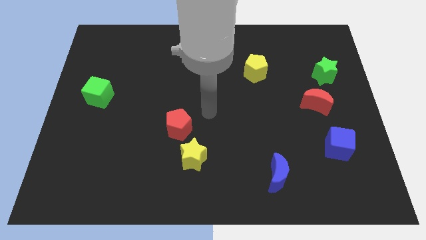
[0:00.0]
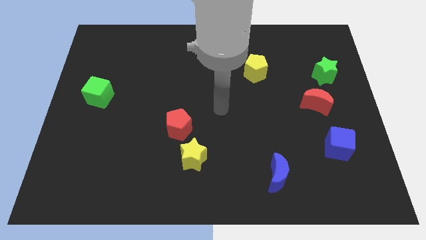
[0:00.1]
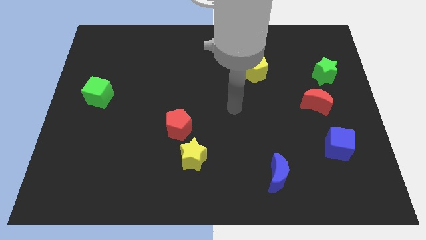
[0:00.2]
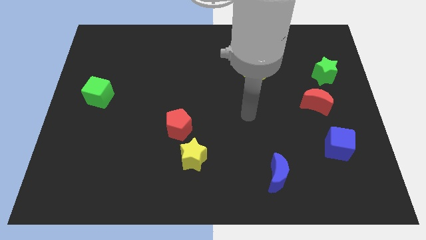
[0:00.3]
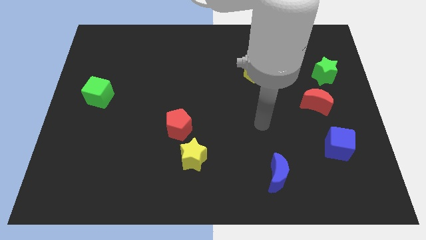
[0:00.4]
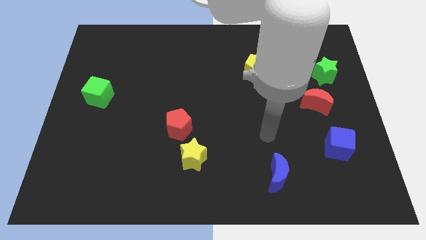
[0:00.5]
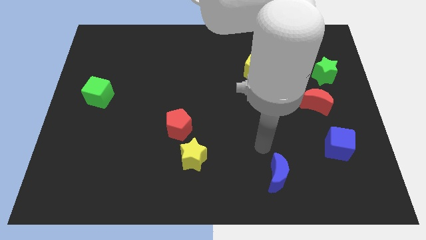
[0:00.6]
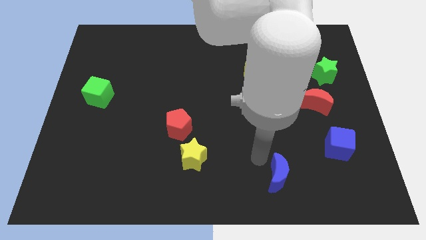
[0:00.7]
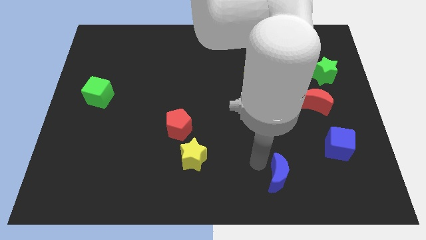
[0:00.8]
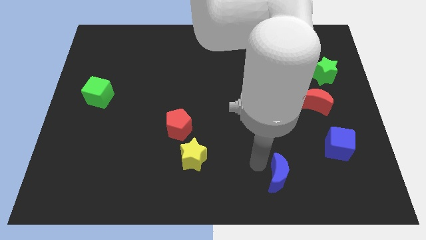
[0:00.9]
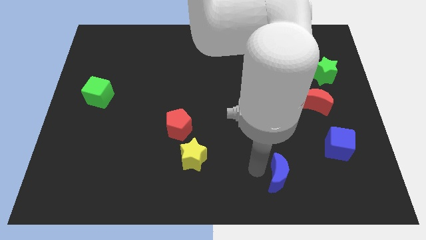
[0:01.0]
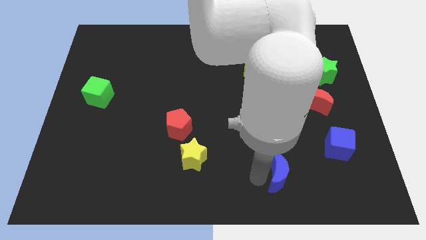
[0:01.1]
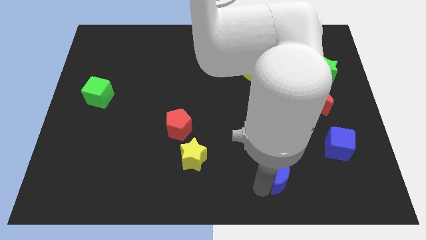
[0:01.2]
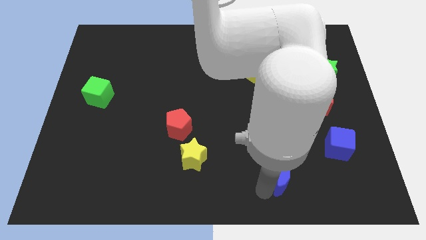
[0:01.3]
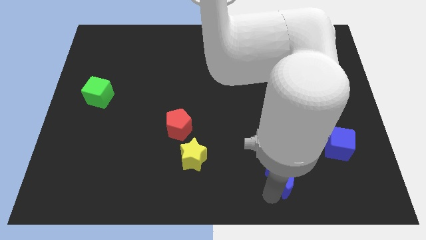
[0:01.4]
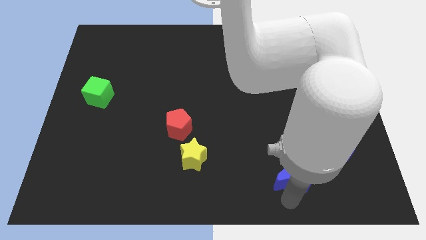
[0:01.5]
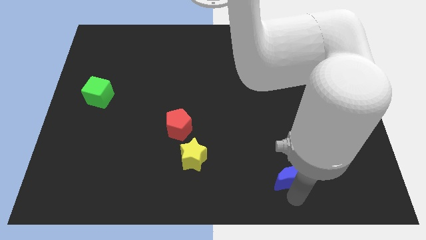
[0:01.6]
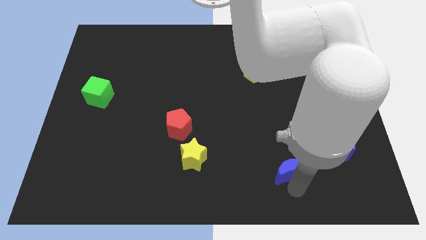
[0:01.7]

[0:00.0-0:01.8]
move your arm and turn the blue moon

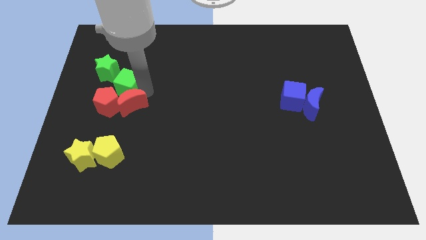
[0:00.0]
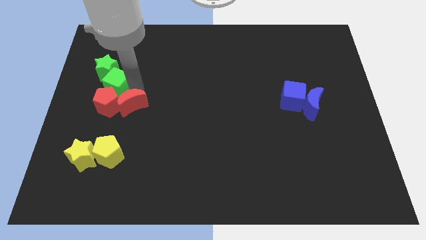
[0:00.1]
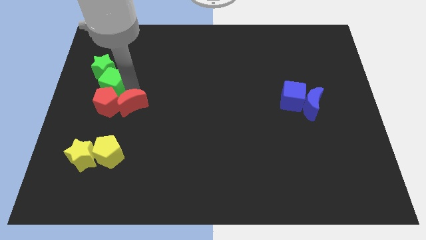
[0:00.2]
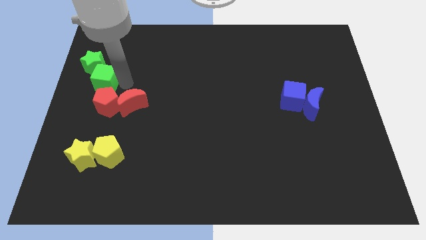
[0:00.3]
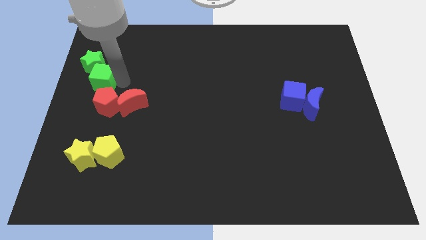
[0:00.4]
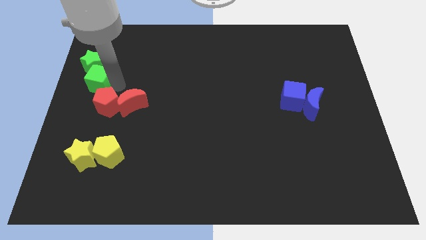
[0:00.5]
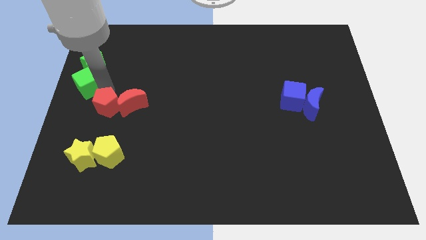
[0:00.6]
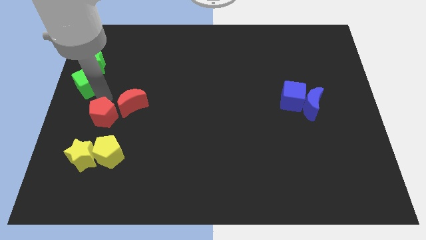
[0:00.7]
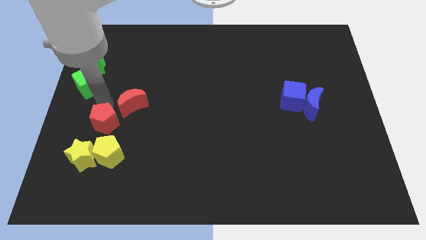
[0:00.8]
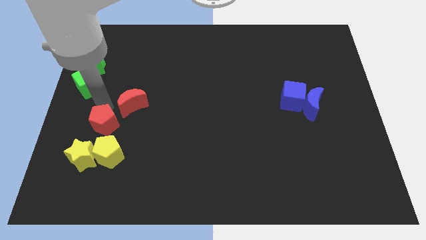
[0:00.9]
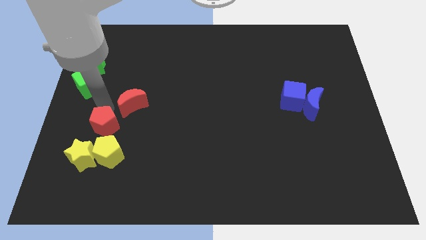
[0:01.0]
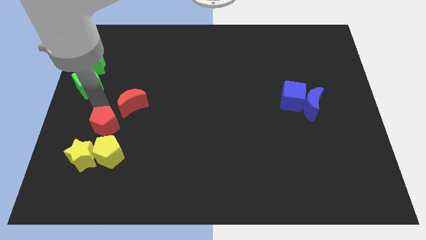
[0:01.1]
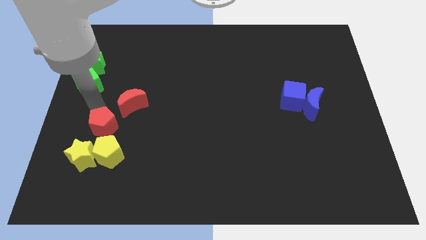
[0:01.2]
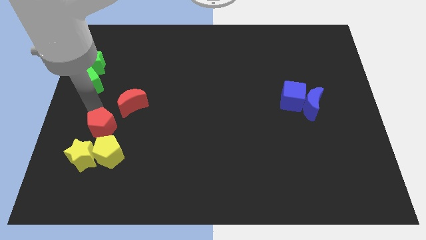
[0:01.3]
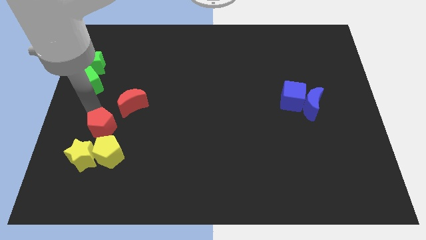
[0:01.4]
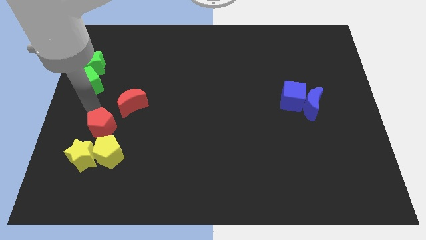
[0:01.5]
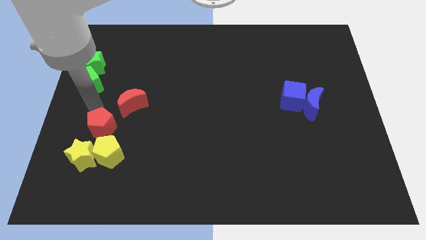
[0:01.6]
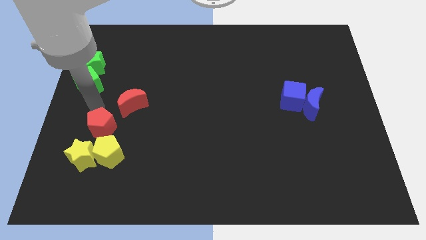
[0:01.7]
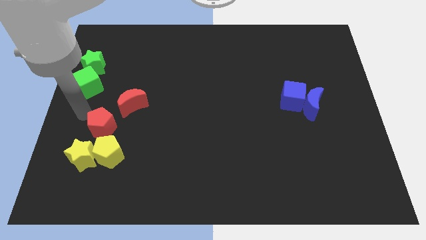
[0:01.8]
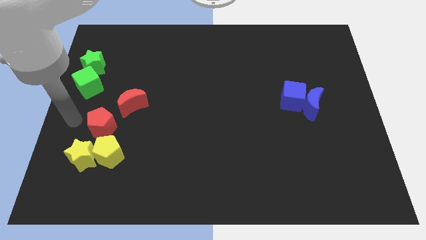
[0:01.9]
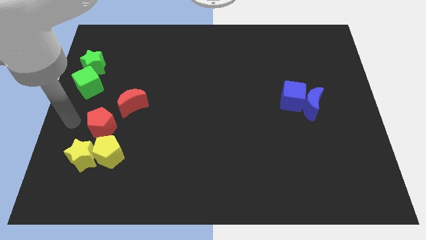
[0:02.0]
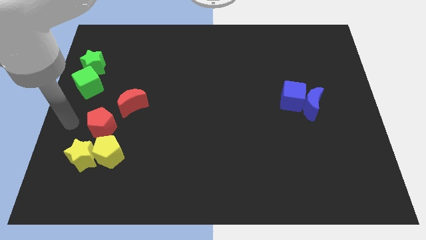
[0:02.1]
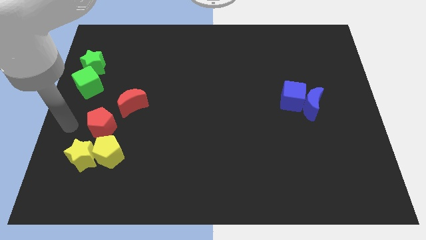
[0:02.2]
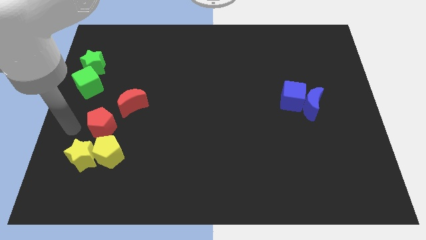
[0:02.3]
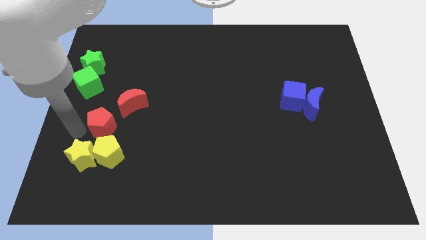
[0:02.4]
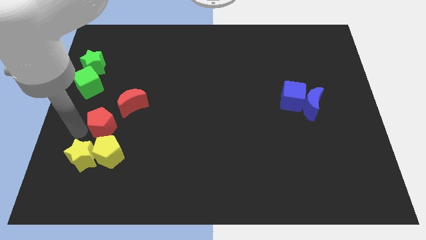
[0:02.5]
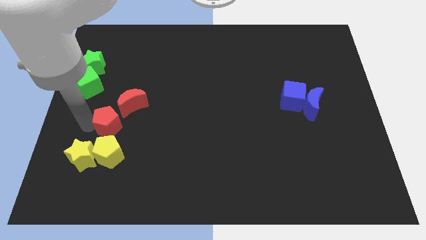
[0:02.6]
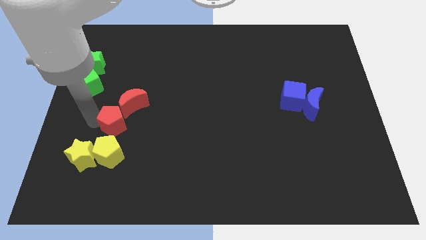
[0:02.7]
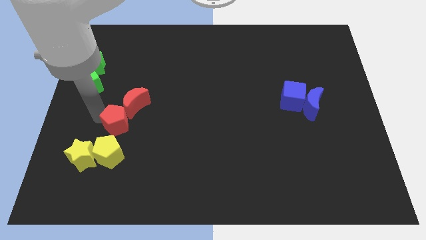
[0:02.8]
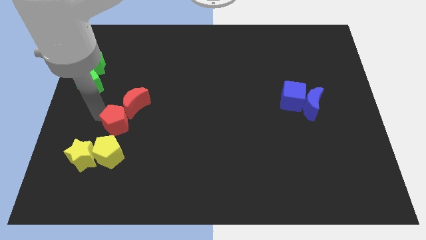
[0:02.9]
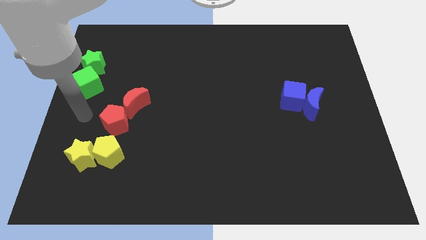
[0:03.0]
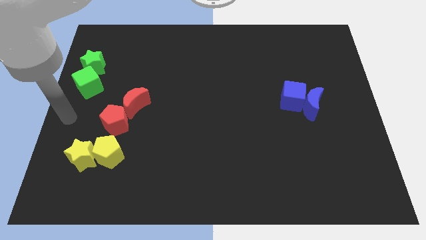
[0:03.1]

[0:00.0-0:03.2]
push the red pentagon diagonally bottom left to the red moon

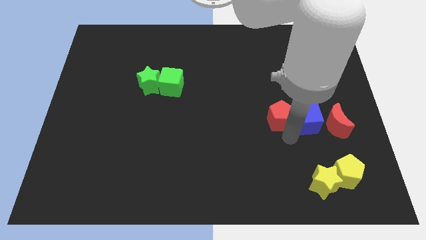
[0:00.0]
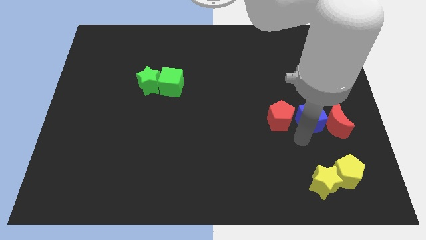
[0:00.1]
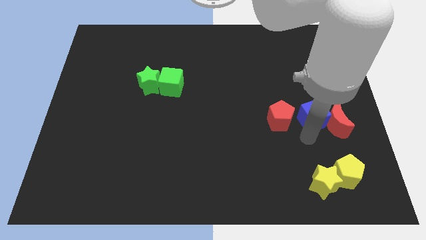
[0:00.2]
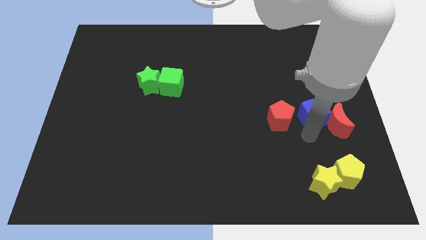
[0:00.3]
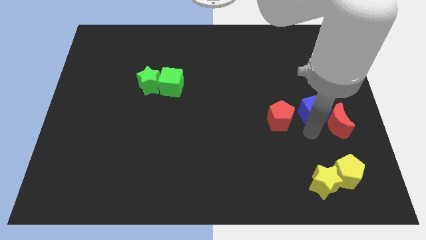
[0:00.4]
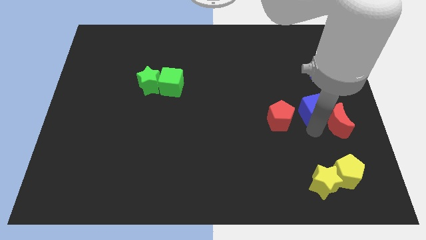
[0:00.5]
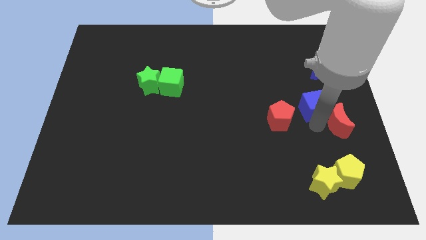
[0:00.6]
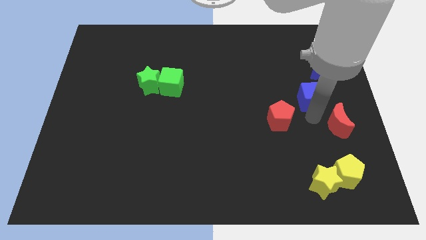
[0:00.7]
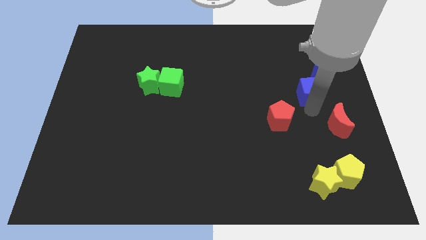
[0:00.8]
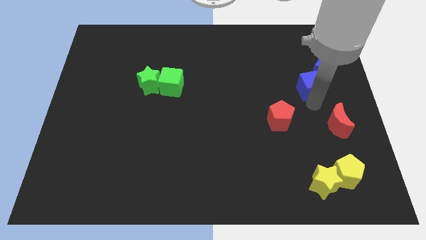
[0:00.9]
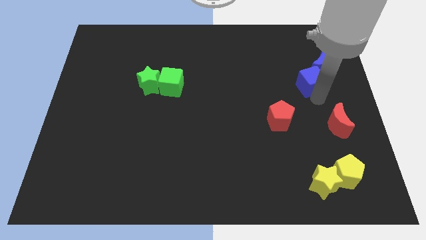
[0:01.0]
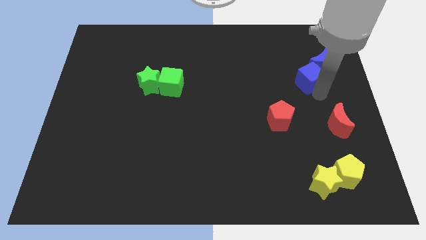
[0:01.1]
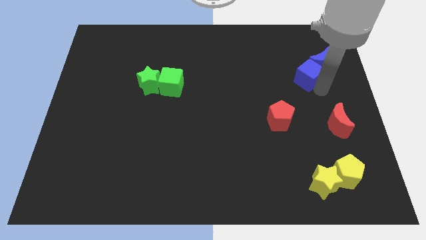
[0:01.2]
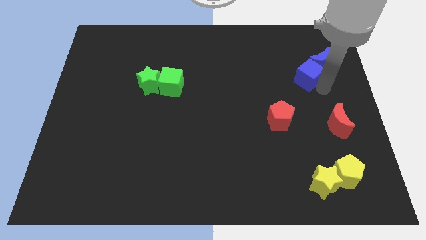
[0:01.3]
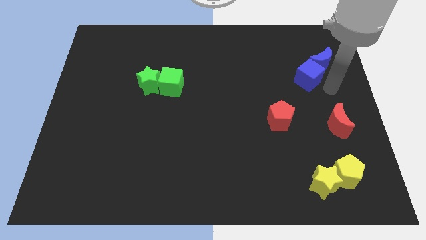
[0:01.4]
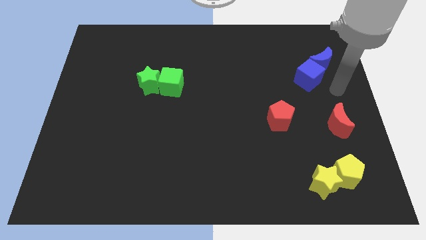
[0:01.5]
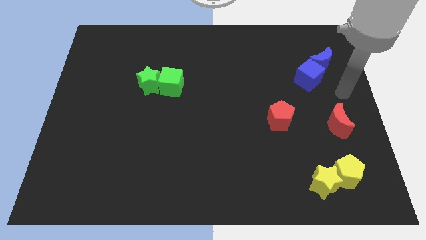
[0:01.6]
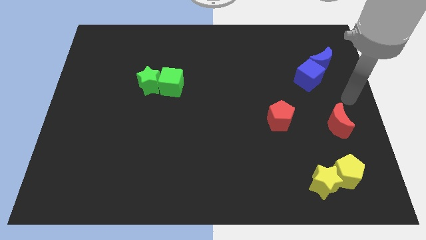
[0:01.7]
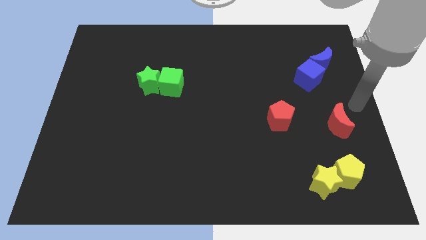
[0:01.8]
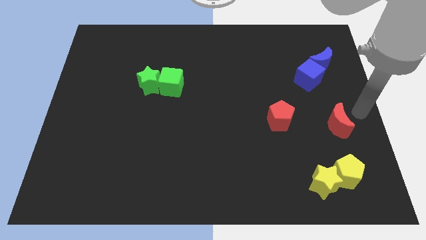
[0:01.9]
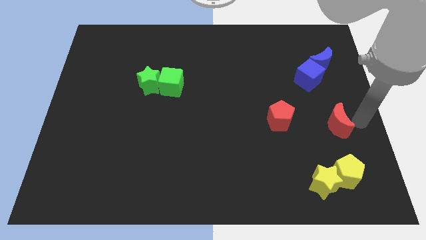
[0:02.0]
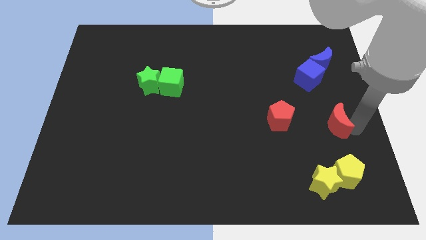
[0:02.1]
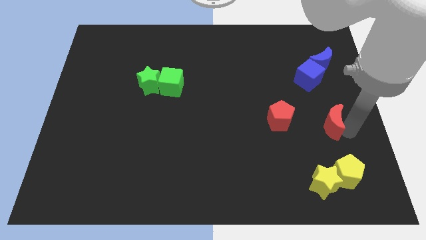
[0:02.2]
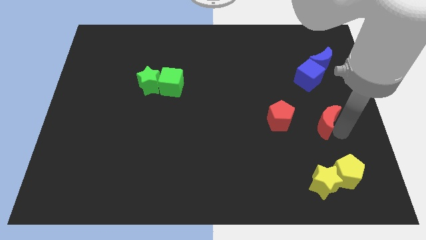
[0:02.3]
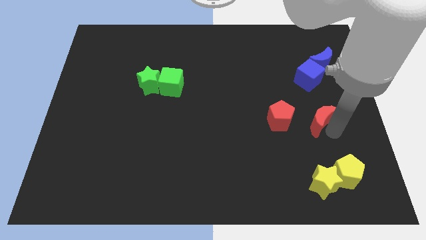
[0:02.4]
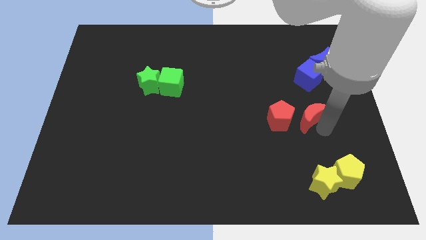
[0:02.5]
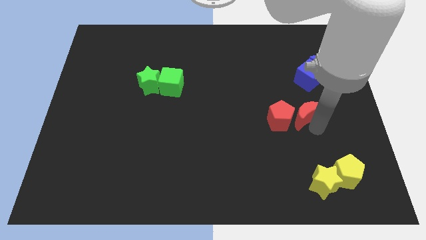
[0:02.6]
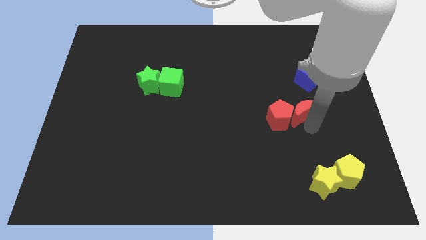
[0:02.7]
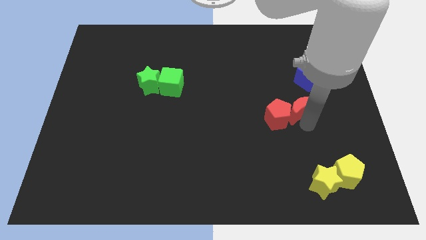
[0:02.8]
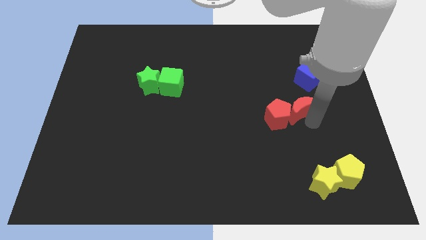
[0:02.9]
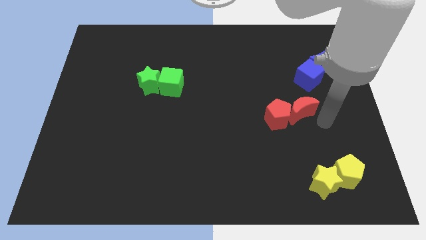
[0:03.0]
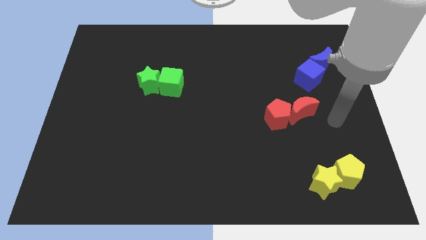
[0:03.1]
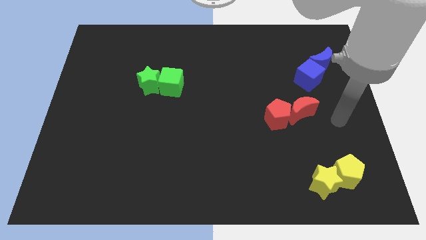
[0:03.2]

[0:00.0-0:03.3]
join red and blue blocks separately at the right of the board

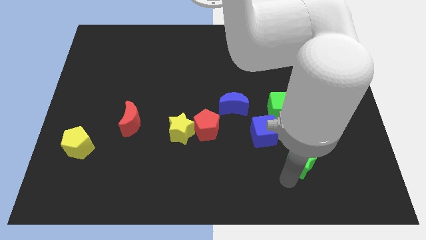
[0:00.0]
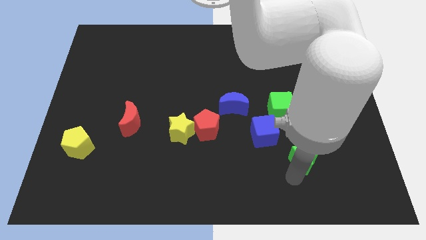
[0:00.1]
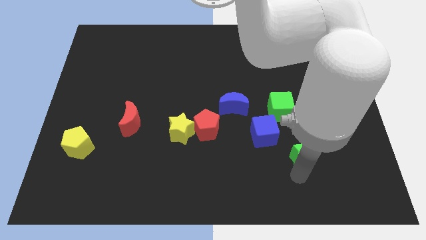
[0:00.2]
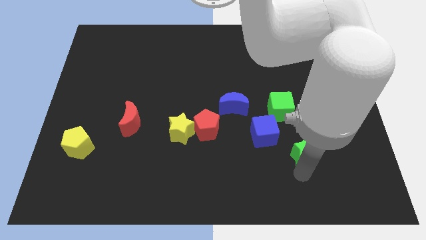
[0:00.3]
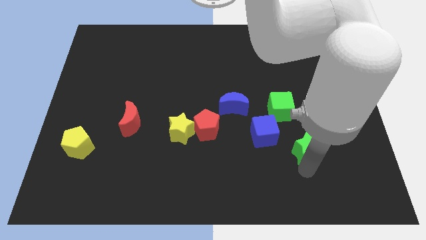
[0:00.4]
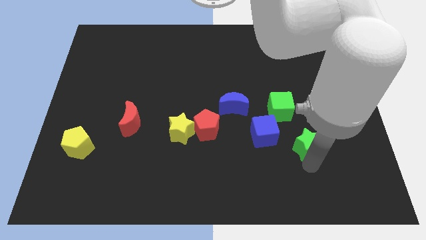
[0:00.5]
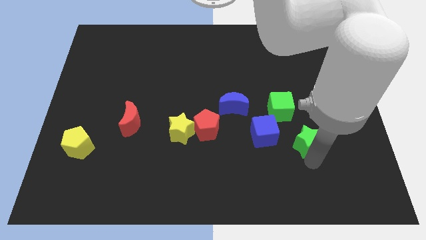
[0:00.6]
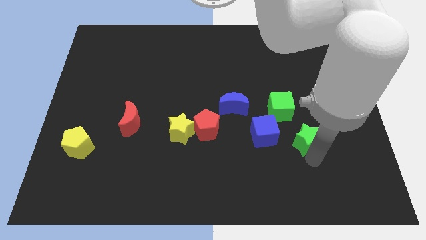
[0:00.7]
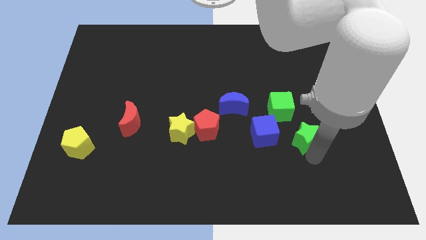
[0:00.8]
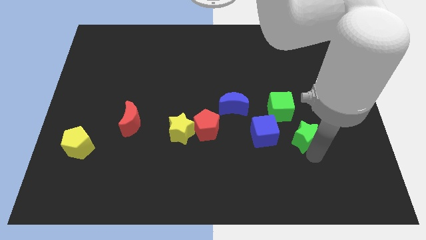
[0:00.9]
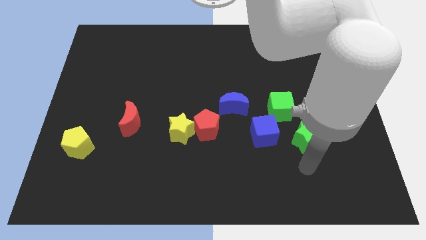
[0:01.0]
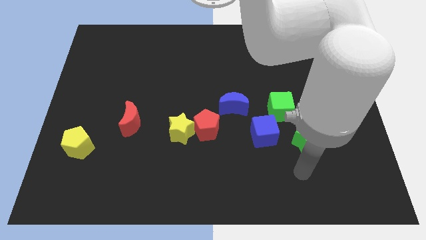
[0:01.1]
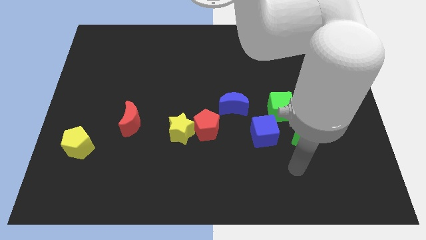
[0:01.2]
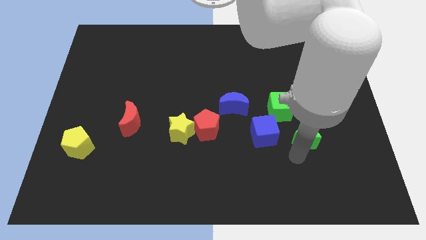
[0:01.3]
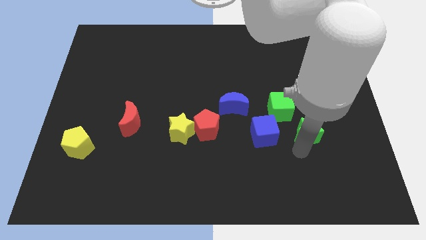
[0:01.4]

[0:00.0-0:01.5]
place the green star to the right of the blue cube
